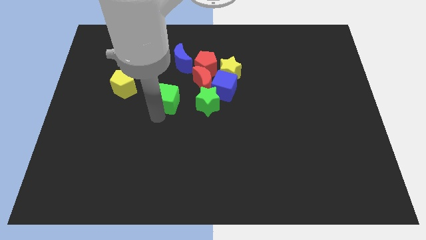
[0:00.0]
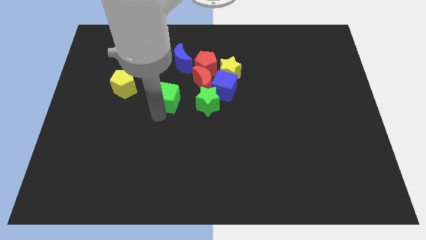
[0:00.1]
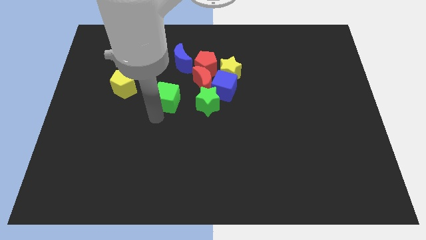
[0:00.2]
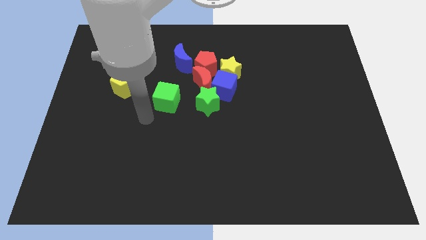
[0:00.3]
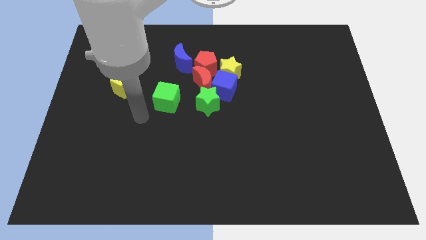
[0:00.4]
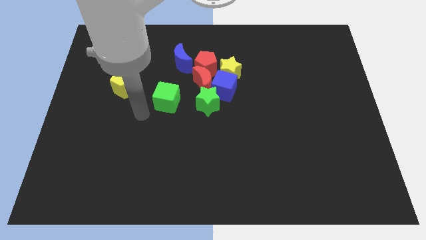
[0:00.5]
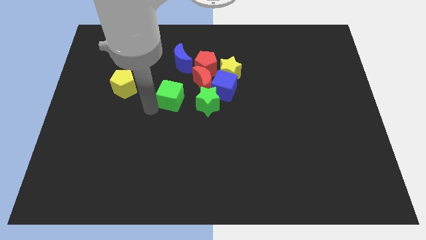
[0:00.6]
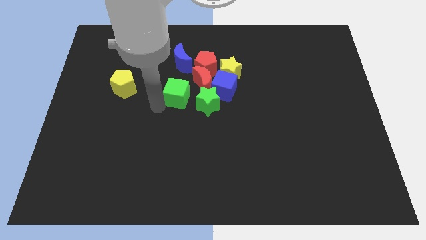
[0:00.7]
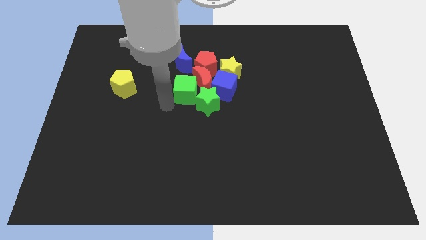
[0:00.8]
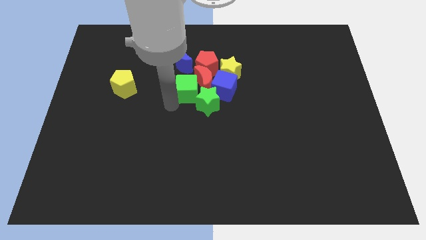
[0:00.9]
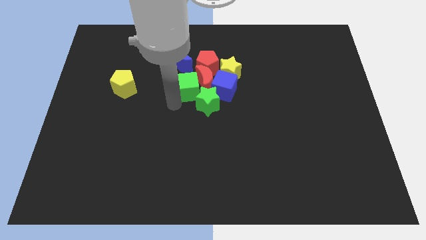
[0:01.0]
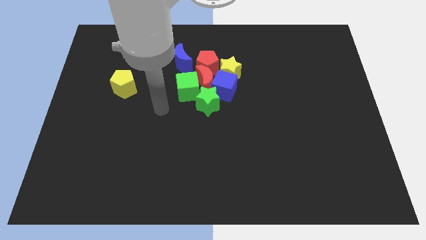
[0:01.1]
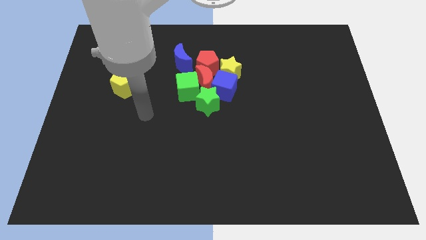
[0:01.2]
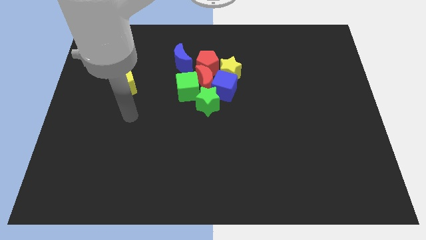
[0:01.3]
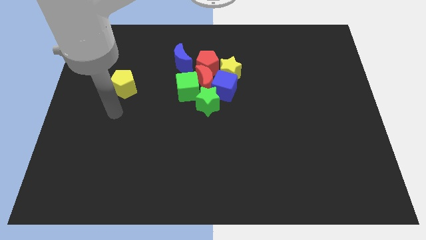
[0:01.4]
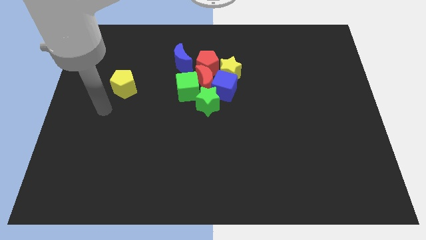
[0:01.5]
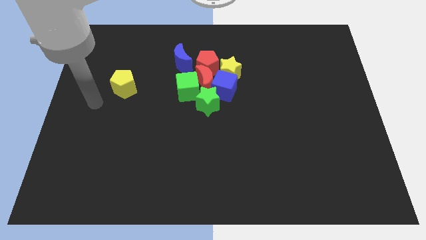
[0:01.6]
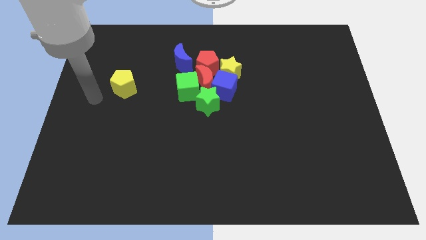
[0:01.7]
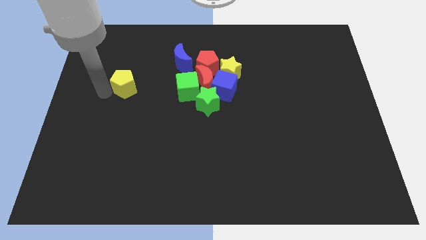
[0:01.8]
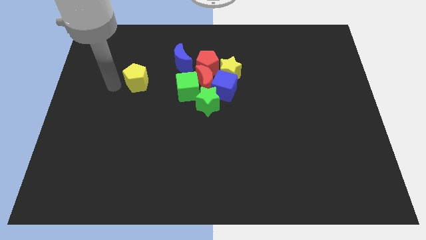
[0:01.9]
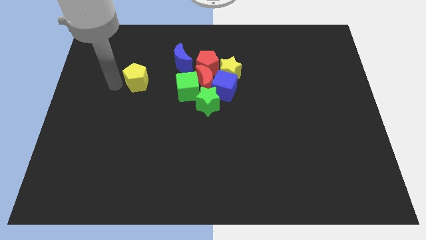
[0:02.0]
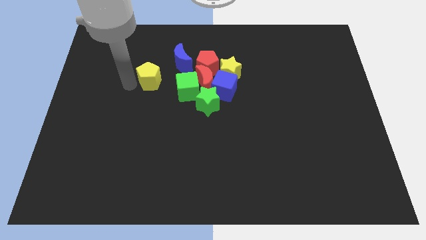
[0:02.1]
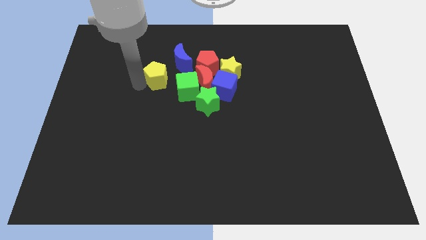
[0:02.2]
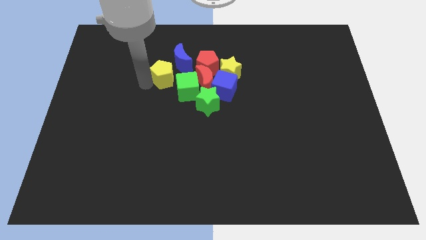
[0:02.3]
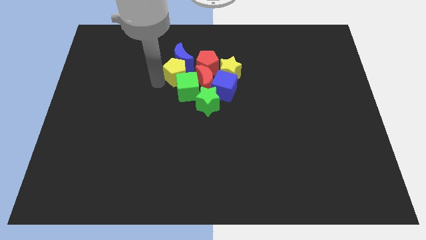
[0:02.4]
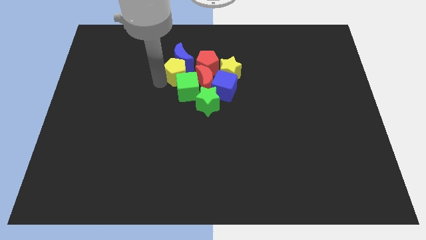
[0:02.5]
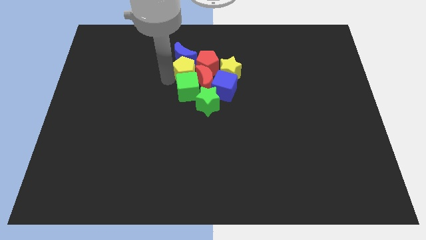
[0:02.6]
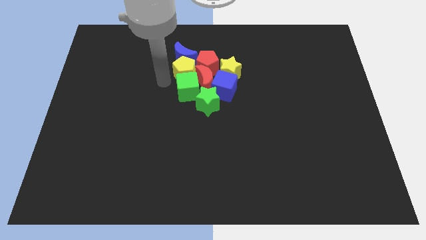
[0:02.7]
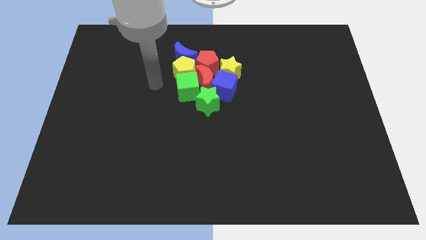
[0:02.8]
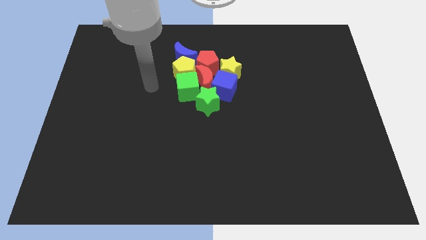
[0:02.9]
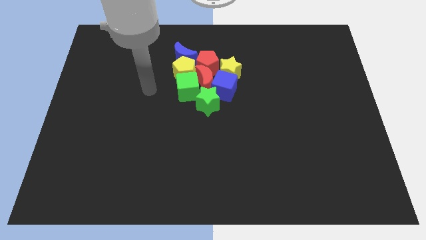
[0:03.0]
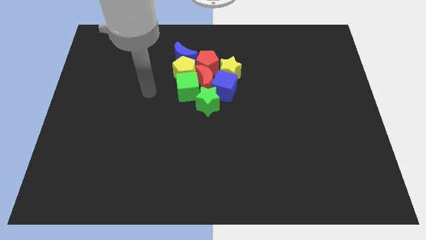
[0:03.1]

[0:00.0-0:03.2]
push yellow pentagon into group of blocks

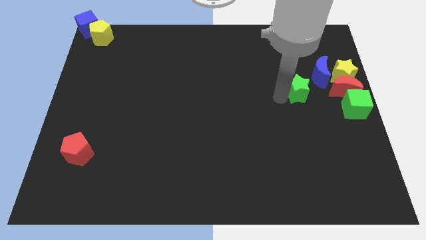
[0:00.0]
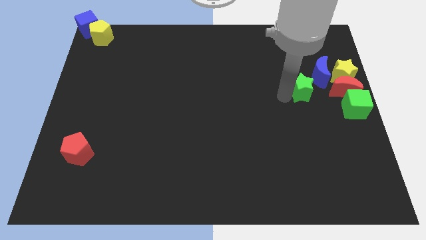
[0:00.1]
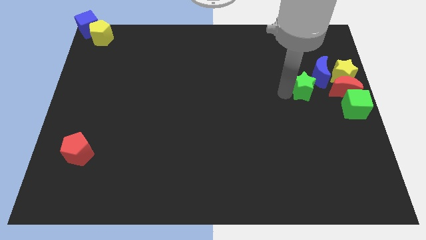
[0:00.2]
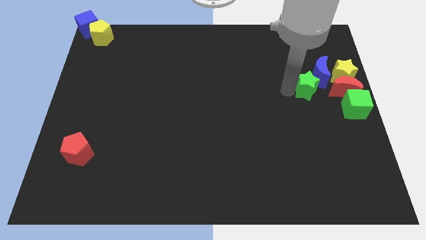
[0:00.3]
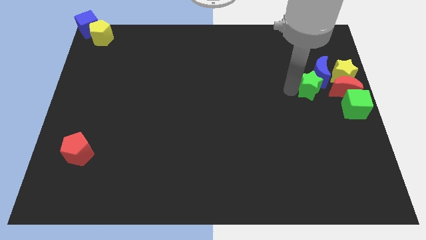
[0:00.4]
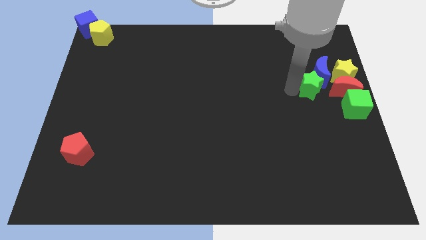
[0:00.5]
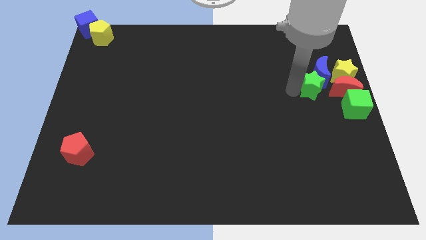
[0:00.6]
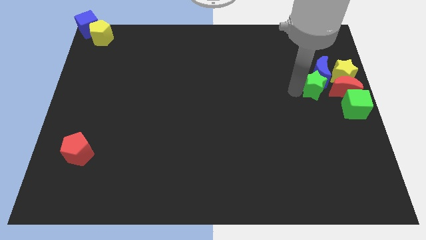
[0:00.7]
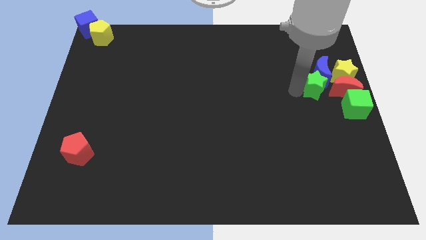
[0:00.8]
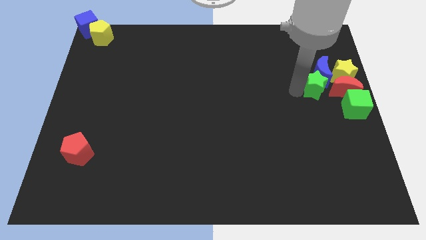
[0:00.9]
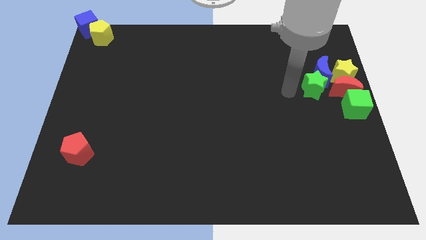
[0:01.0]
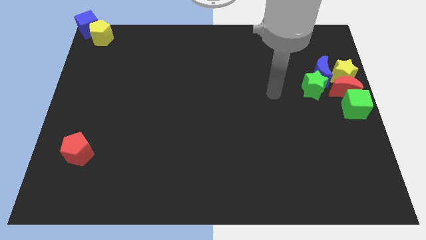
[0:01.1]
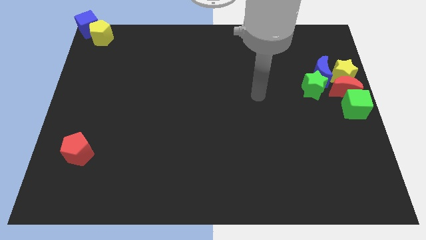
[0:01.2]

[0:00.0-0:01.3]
place the green star towards the bottom left side of the blue crescent

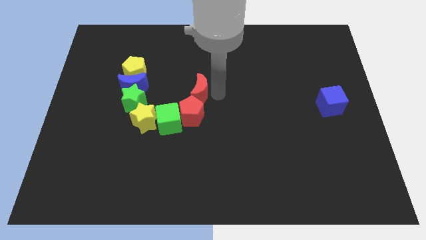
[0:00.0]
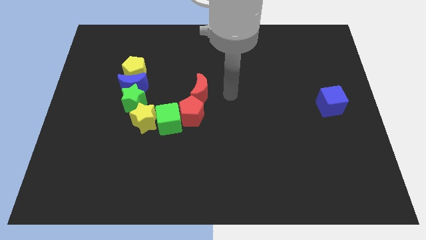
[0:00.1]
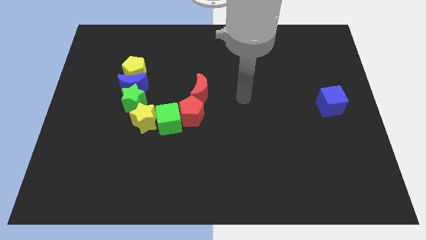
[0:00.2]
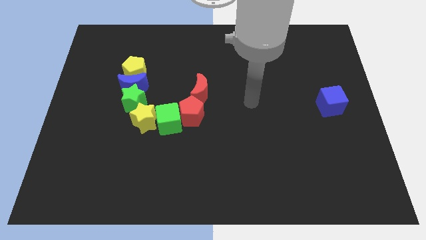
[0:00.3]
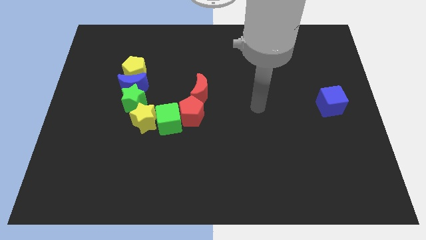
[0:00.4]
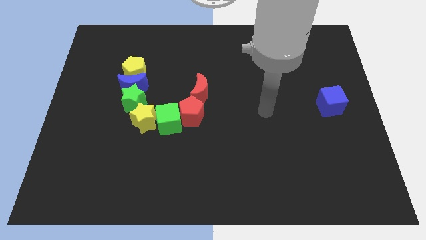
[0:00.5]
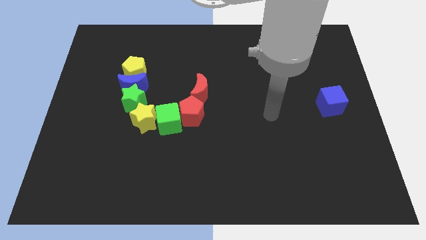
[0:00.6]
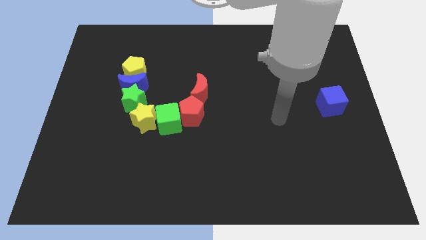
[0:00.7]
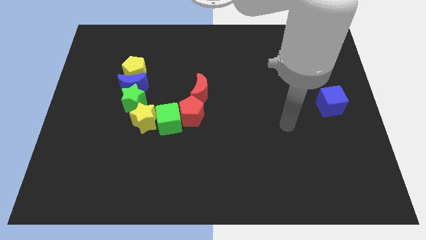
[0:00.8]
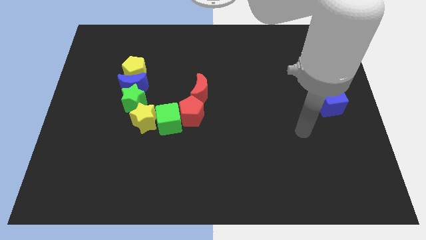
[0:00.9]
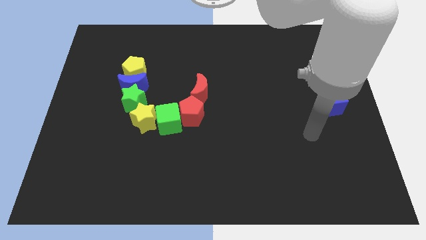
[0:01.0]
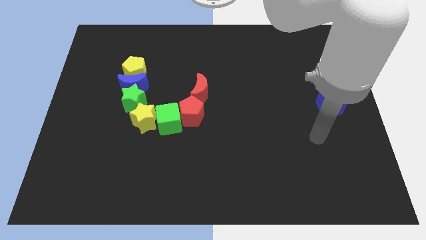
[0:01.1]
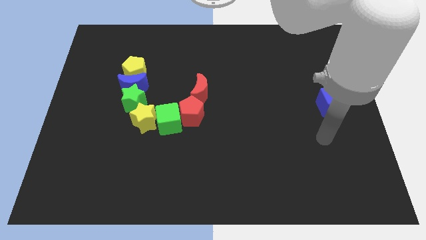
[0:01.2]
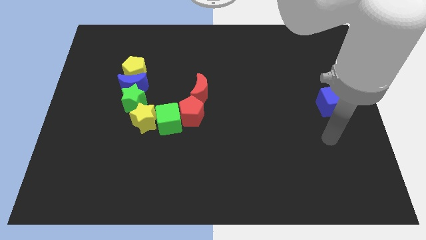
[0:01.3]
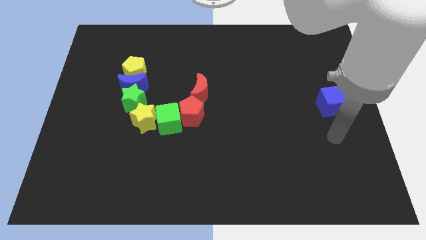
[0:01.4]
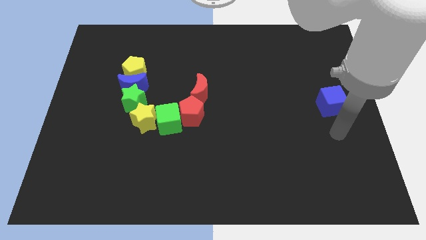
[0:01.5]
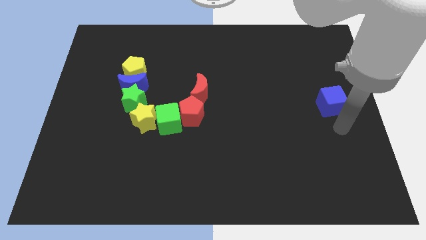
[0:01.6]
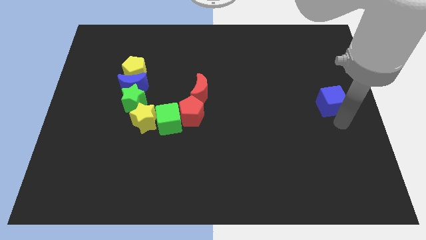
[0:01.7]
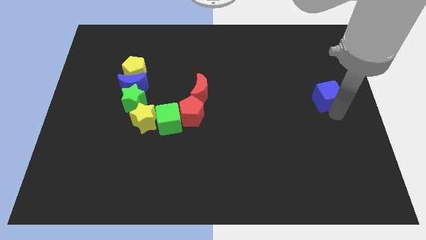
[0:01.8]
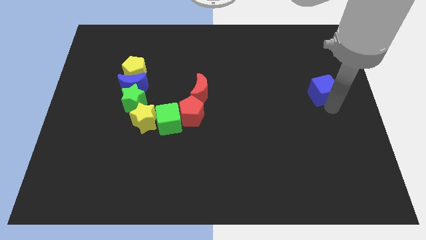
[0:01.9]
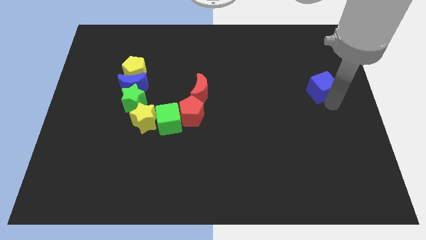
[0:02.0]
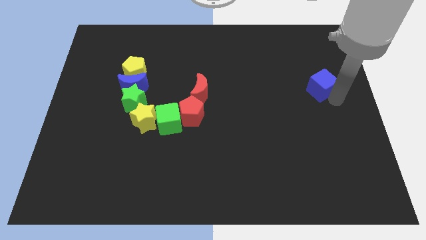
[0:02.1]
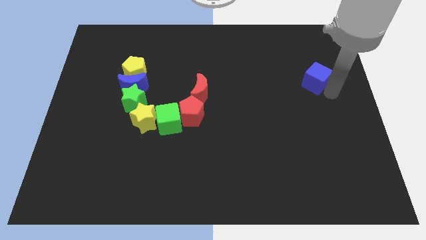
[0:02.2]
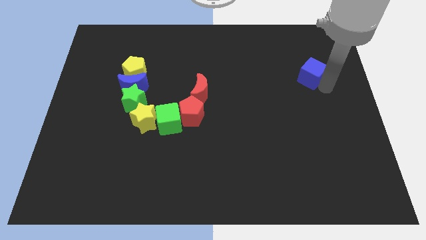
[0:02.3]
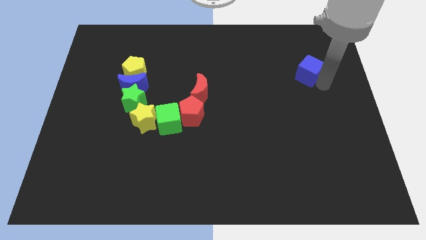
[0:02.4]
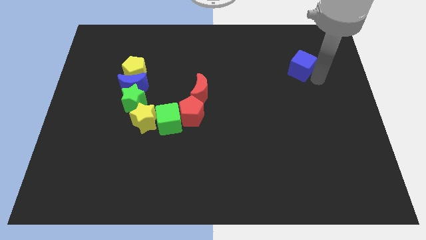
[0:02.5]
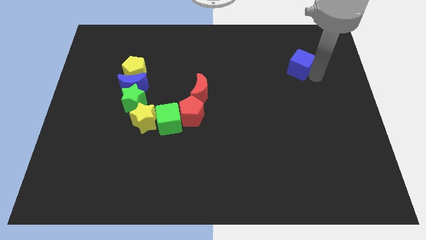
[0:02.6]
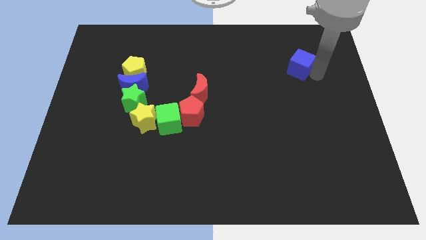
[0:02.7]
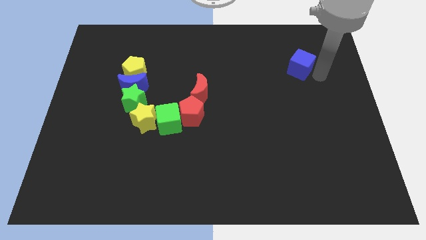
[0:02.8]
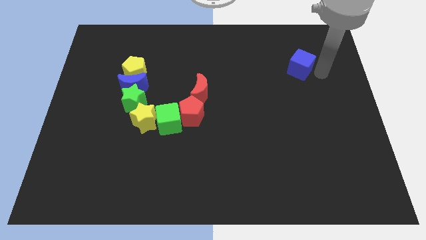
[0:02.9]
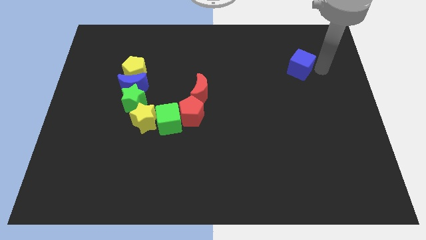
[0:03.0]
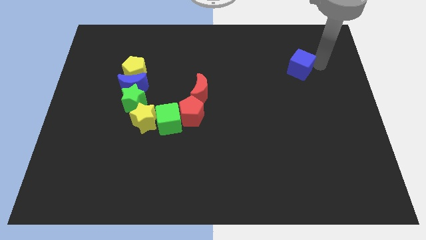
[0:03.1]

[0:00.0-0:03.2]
slide the blue moon diagonally to the top right of the red pentagon

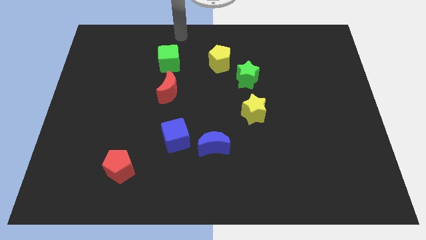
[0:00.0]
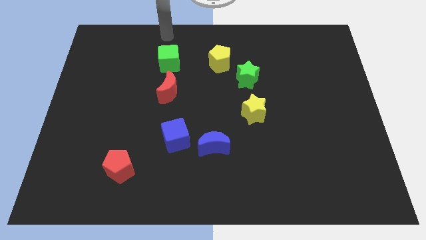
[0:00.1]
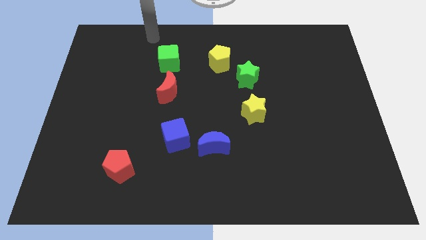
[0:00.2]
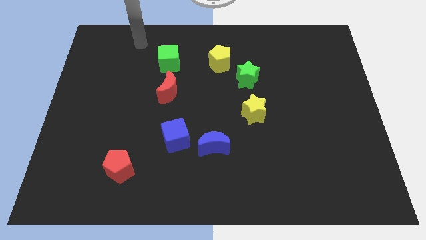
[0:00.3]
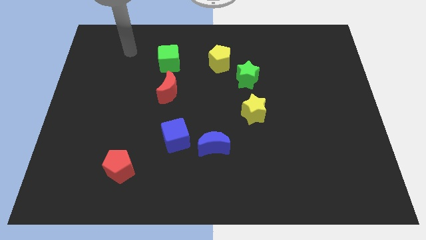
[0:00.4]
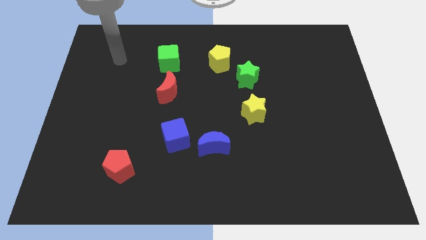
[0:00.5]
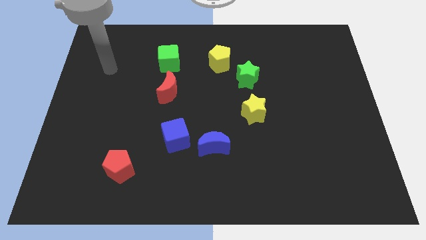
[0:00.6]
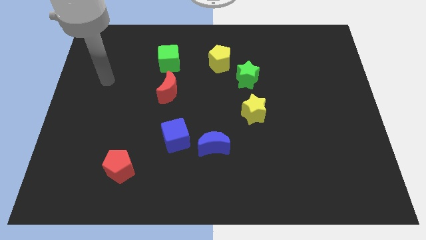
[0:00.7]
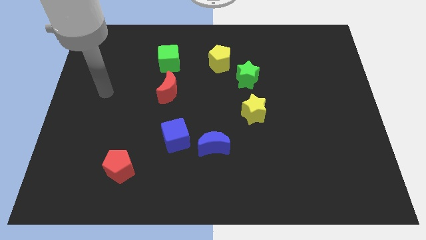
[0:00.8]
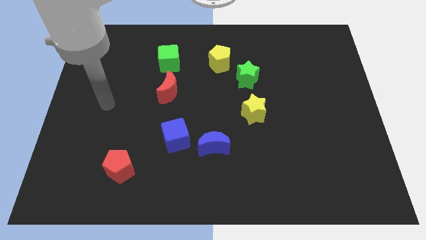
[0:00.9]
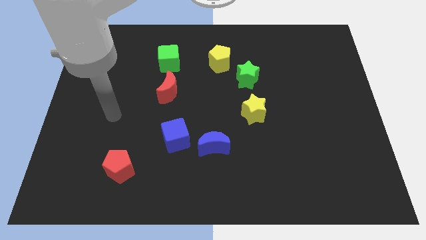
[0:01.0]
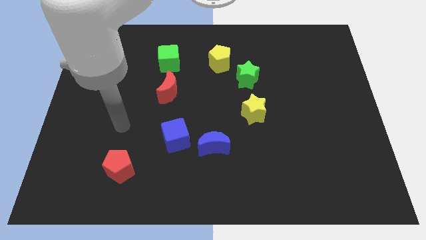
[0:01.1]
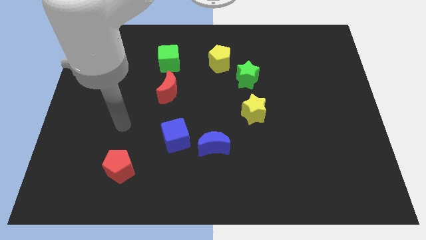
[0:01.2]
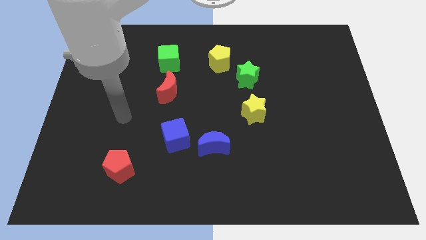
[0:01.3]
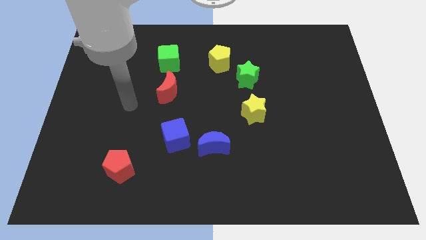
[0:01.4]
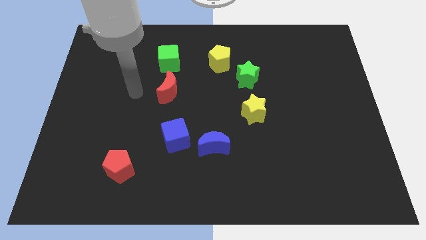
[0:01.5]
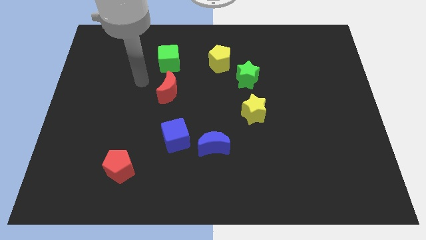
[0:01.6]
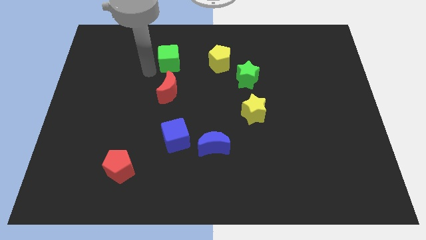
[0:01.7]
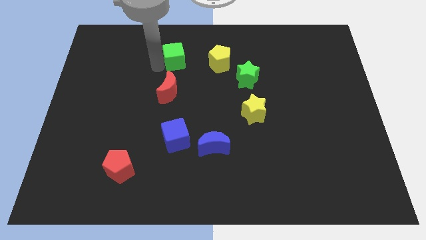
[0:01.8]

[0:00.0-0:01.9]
touch the green cube with your arm
